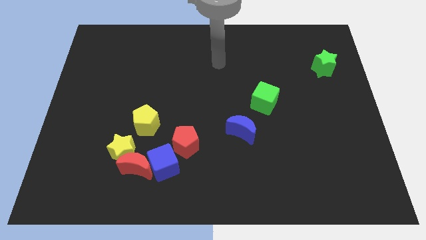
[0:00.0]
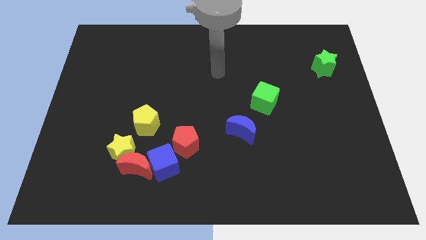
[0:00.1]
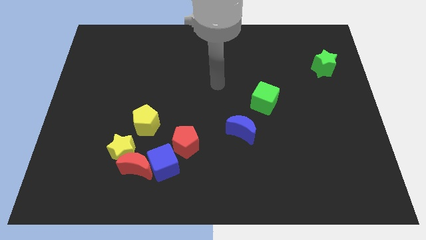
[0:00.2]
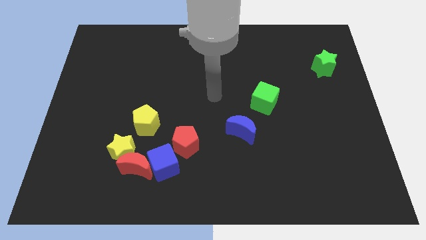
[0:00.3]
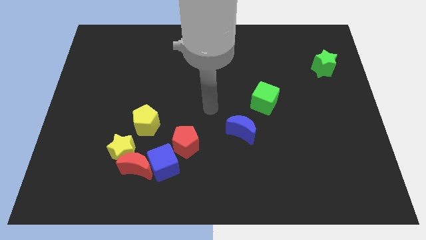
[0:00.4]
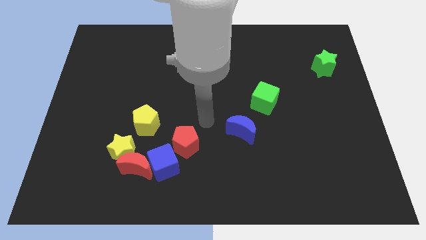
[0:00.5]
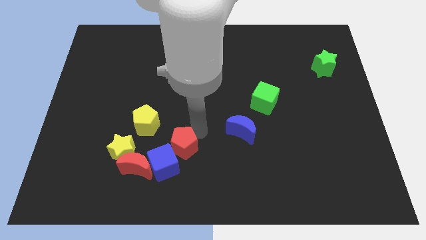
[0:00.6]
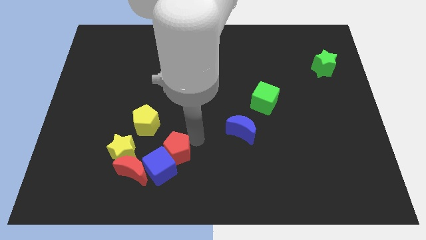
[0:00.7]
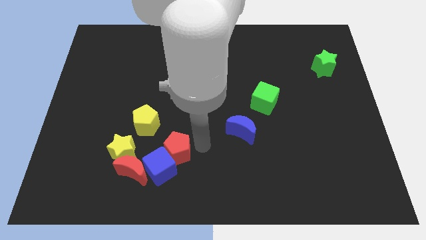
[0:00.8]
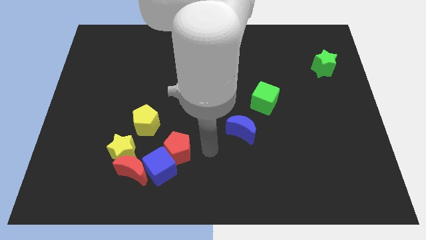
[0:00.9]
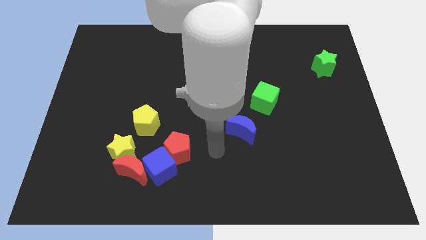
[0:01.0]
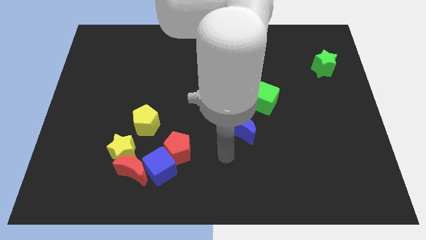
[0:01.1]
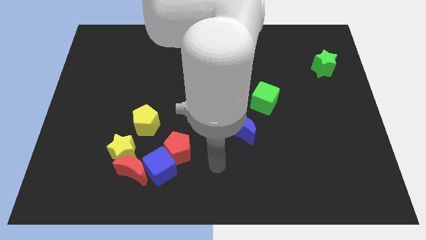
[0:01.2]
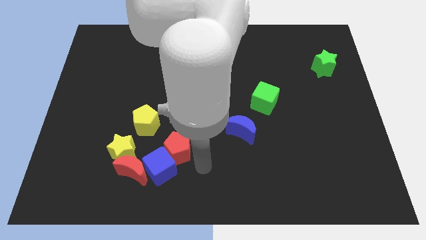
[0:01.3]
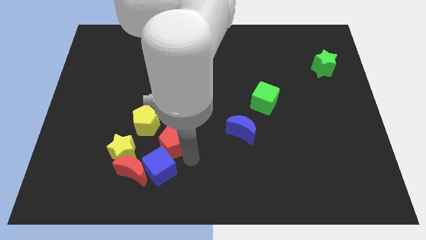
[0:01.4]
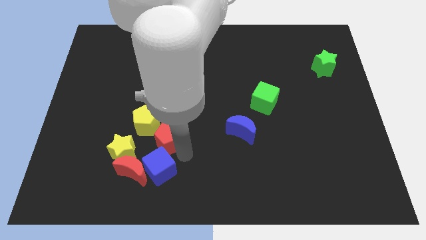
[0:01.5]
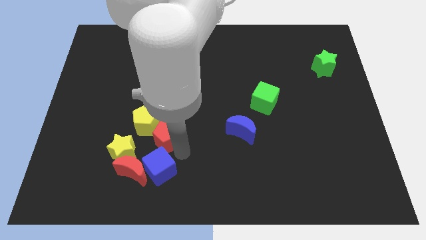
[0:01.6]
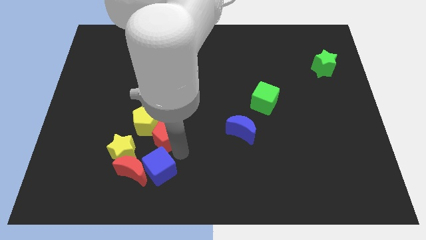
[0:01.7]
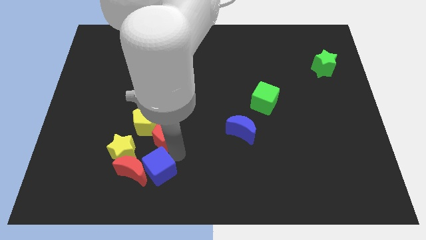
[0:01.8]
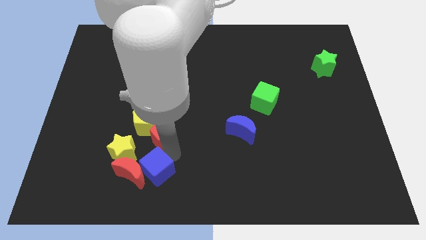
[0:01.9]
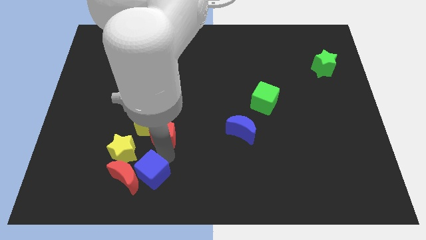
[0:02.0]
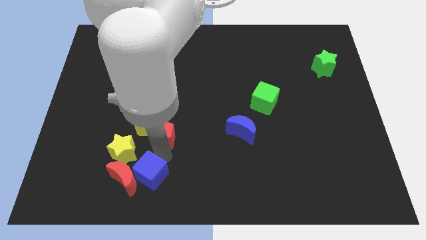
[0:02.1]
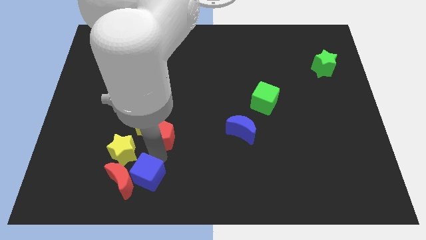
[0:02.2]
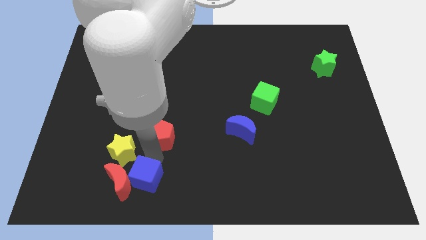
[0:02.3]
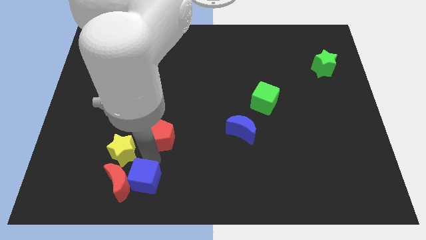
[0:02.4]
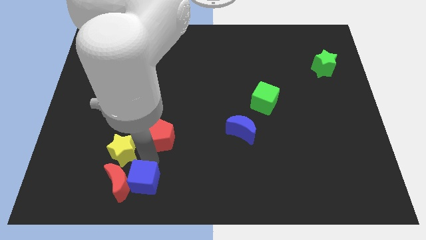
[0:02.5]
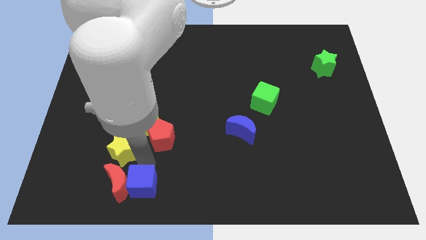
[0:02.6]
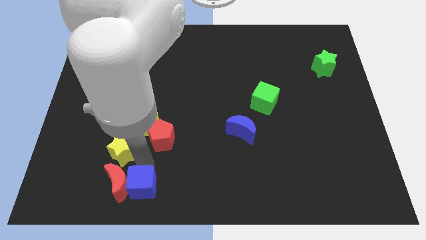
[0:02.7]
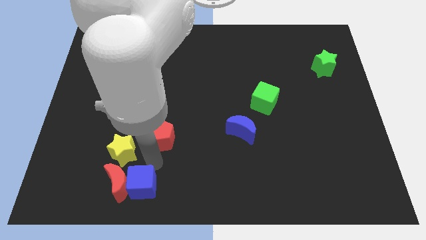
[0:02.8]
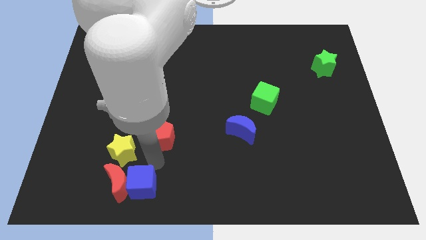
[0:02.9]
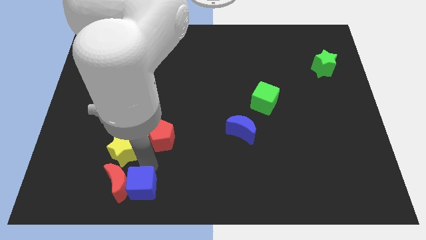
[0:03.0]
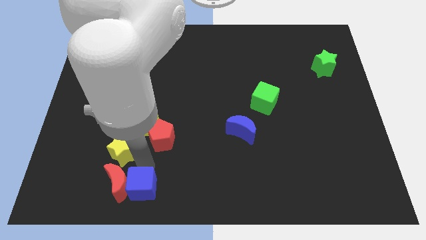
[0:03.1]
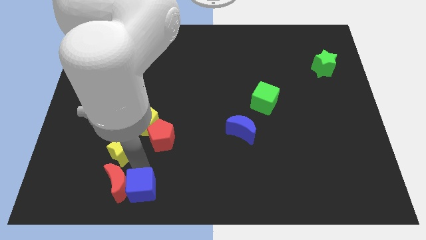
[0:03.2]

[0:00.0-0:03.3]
separate the blue cube and red pentagon

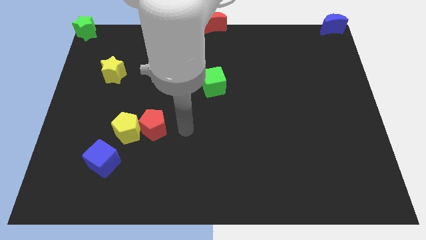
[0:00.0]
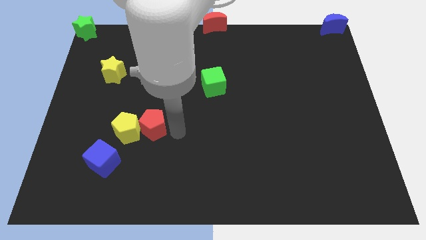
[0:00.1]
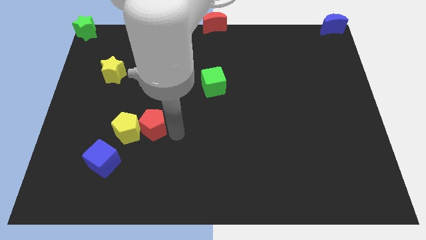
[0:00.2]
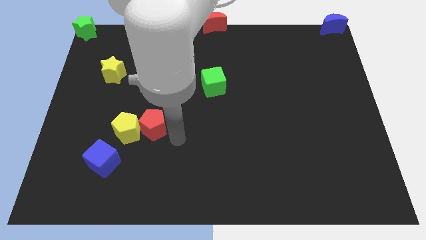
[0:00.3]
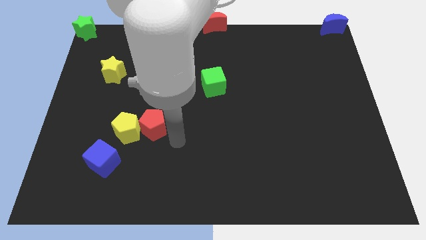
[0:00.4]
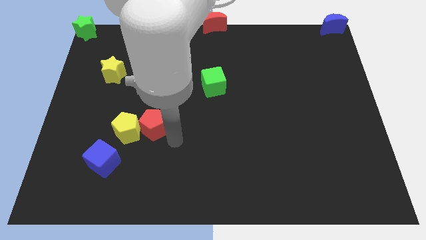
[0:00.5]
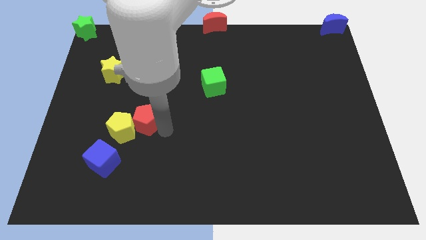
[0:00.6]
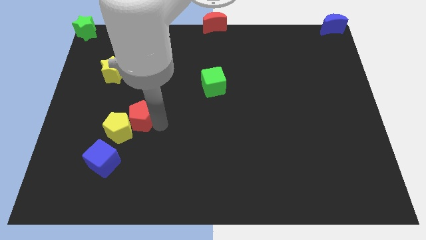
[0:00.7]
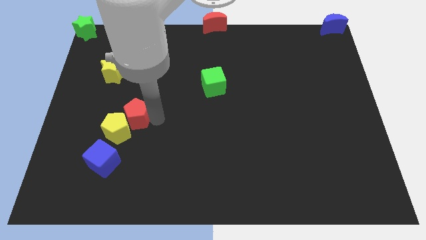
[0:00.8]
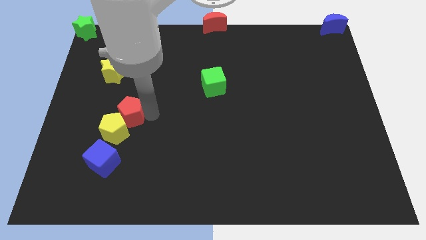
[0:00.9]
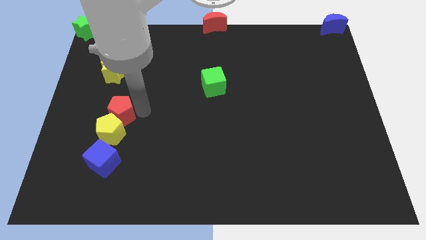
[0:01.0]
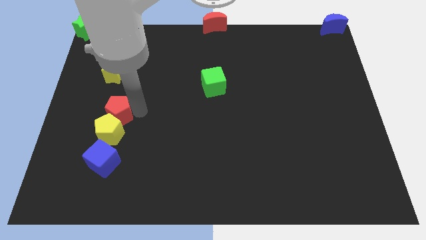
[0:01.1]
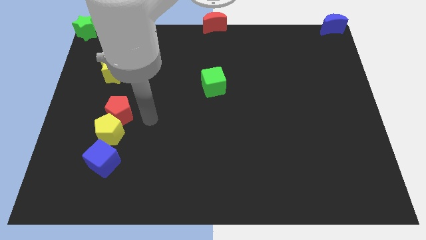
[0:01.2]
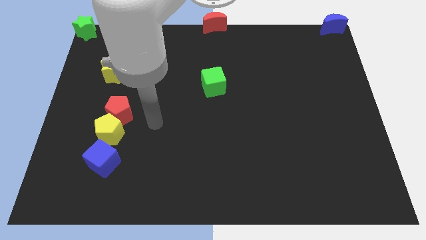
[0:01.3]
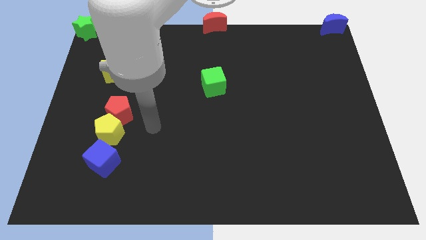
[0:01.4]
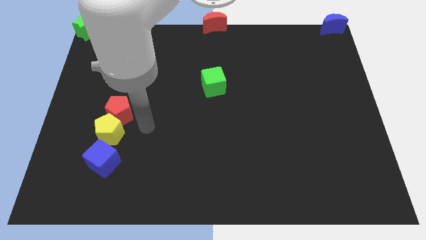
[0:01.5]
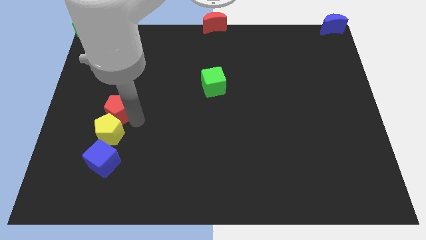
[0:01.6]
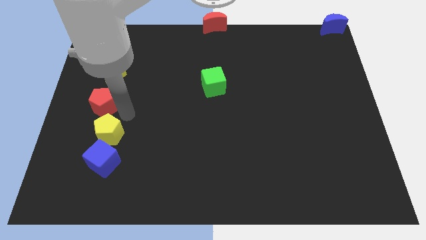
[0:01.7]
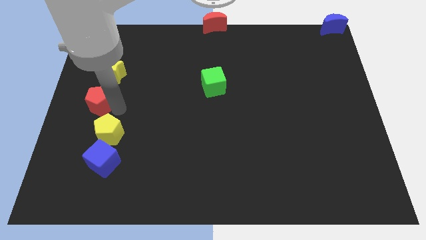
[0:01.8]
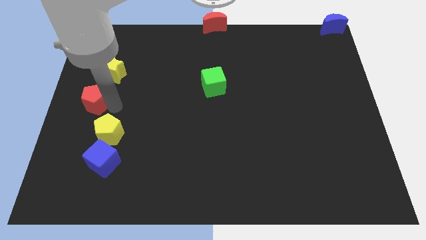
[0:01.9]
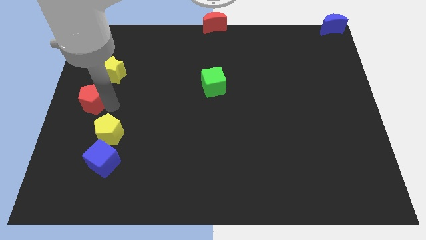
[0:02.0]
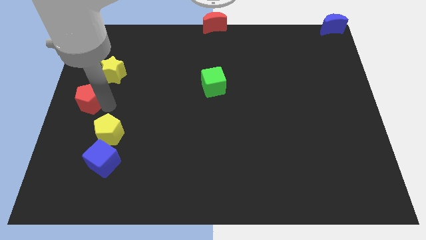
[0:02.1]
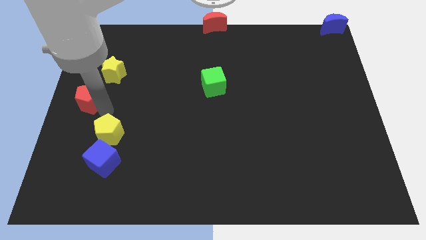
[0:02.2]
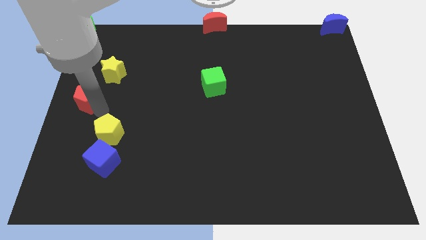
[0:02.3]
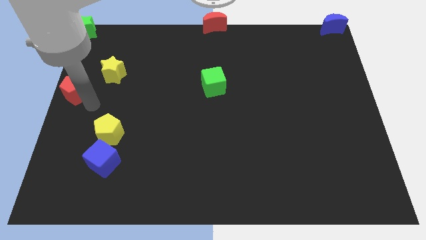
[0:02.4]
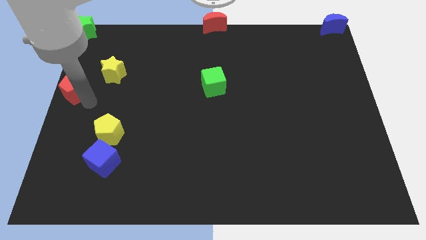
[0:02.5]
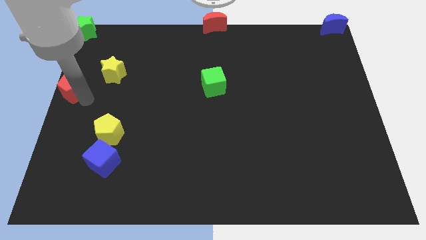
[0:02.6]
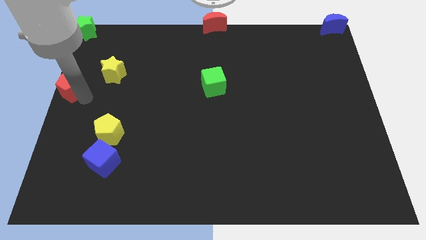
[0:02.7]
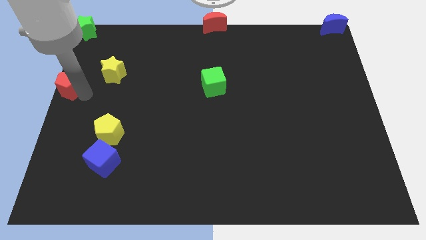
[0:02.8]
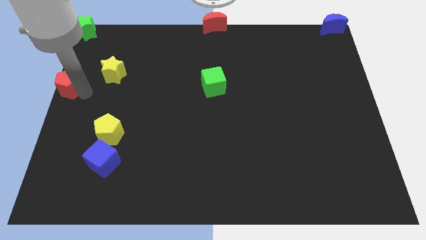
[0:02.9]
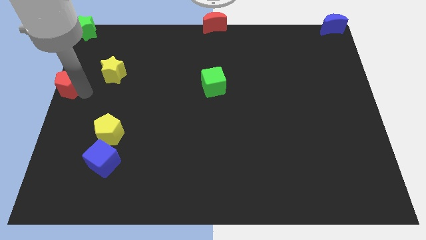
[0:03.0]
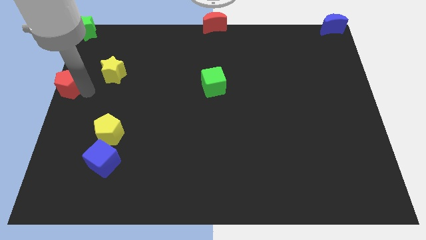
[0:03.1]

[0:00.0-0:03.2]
push the red pentagon to the center left corner of the board

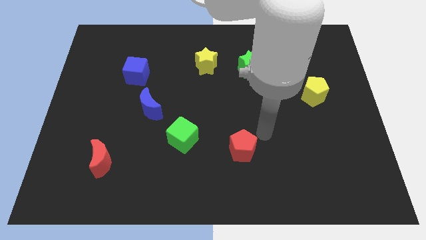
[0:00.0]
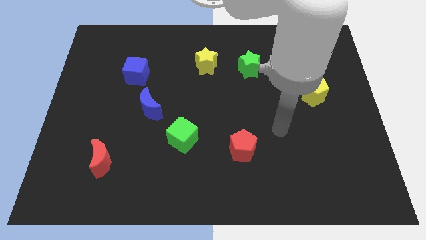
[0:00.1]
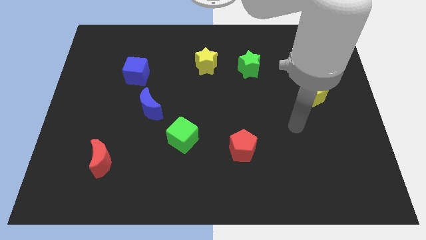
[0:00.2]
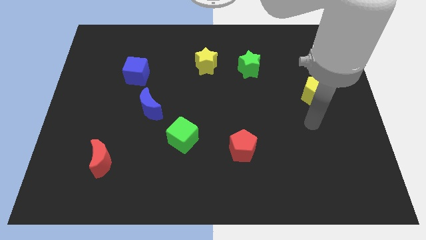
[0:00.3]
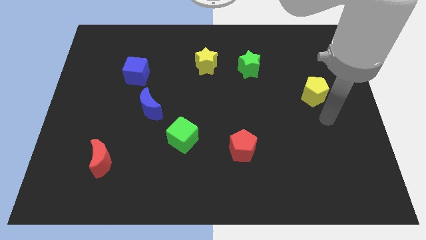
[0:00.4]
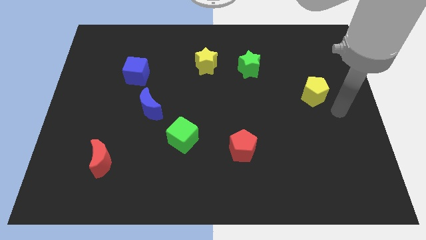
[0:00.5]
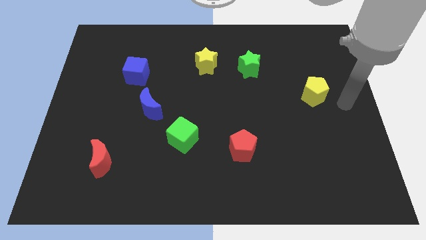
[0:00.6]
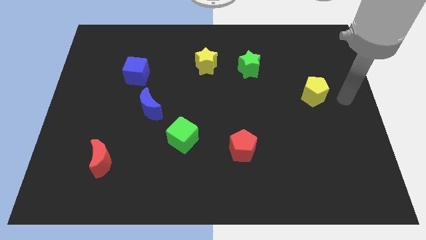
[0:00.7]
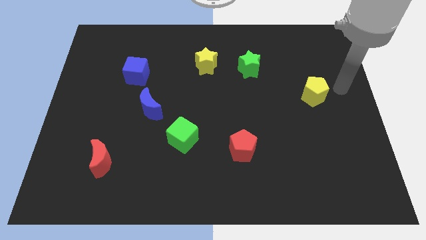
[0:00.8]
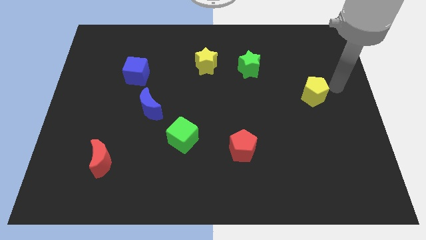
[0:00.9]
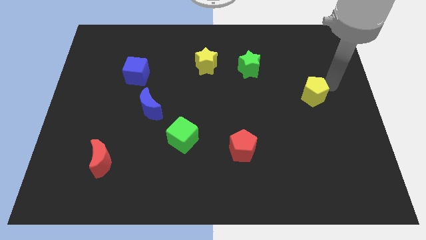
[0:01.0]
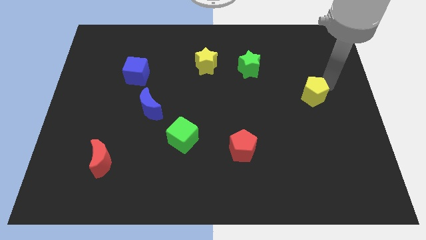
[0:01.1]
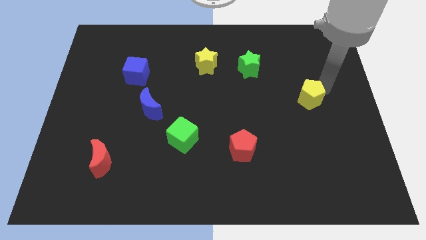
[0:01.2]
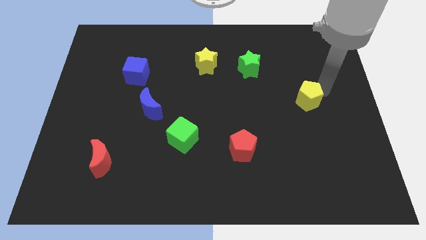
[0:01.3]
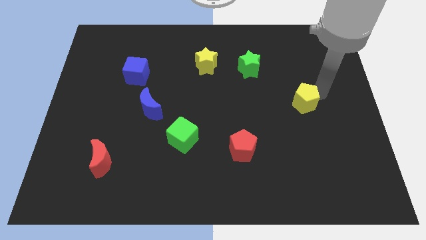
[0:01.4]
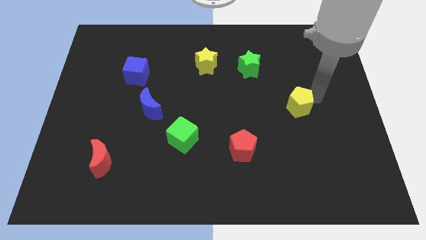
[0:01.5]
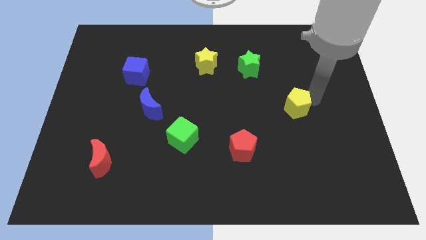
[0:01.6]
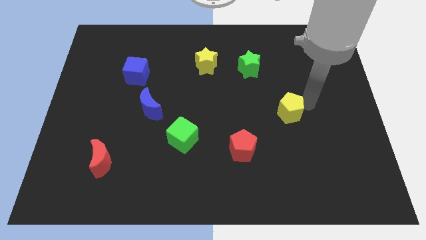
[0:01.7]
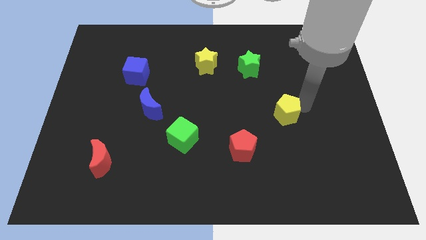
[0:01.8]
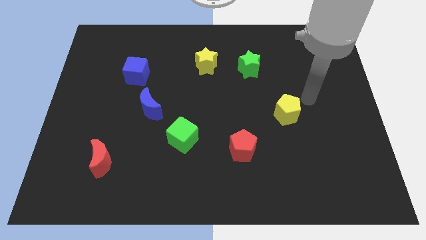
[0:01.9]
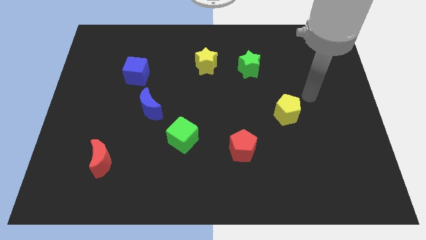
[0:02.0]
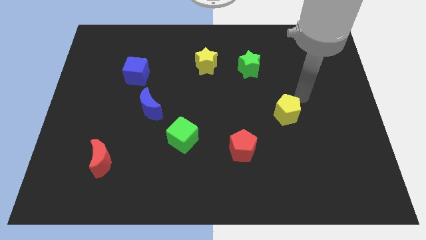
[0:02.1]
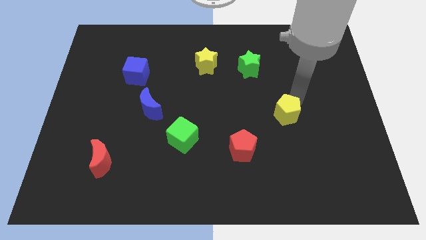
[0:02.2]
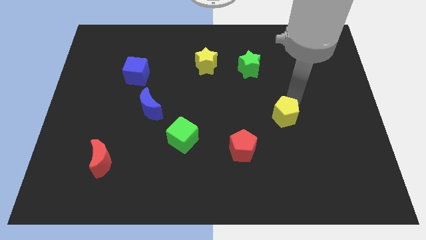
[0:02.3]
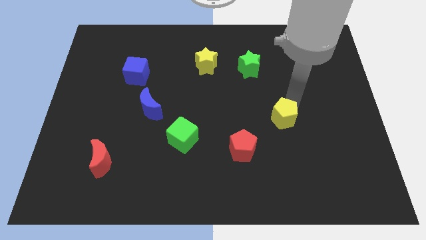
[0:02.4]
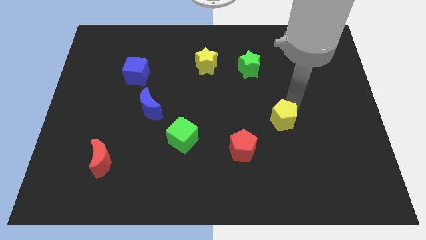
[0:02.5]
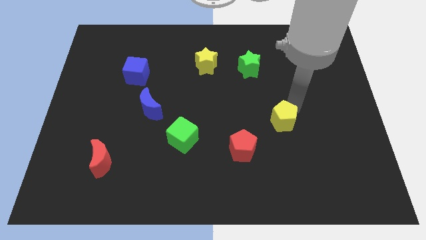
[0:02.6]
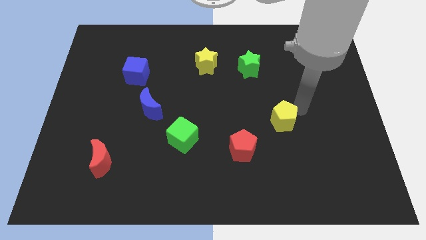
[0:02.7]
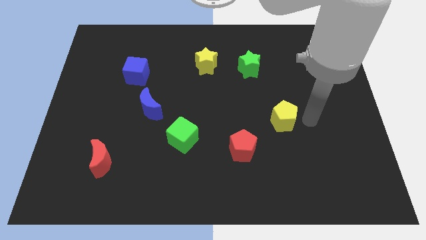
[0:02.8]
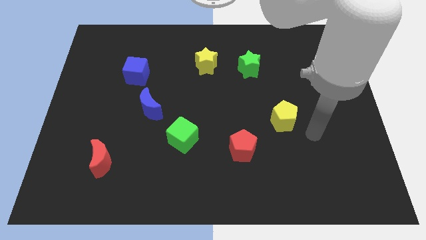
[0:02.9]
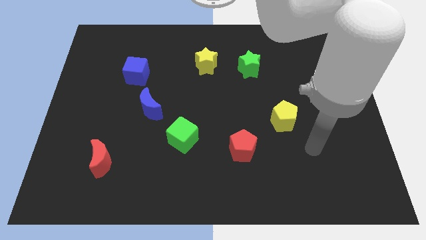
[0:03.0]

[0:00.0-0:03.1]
push the yellow pentagon diagonal to the red pentagon
